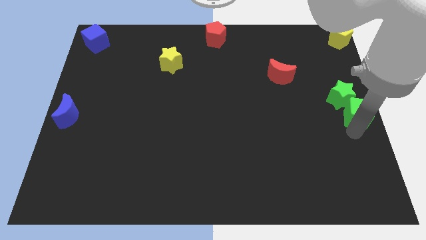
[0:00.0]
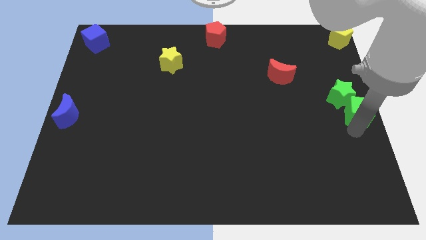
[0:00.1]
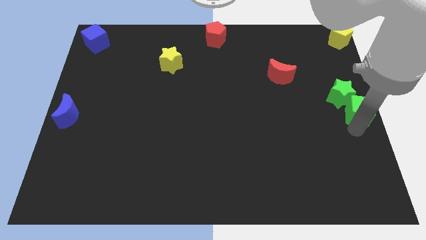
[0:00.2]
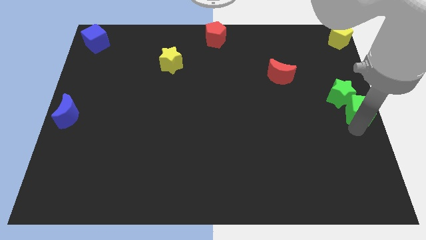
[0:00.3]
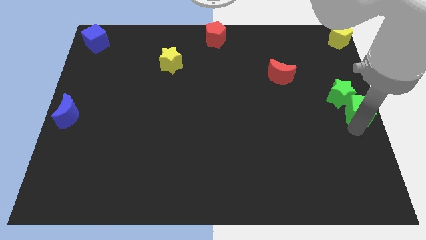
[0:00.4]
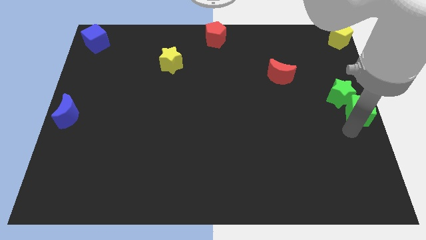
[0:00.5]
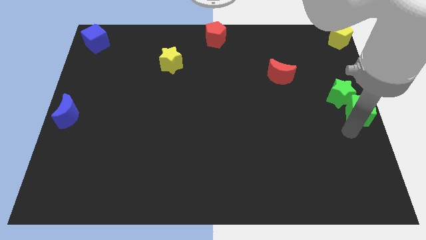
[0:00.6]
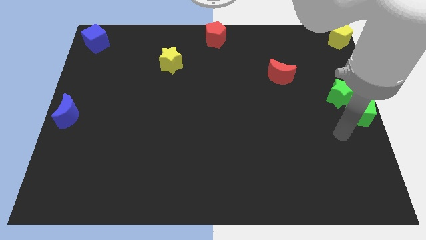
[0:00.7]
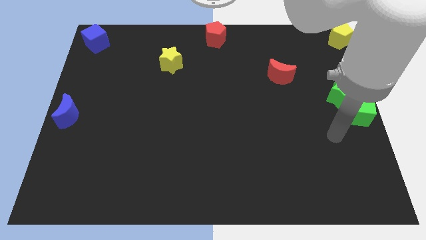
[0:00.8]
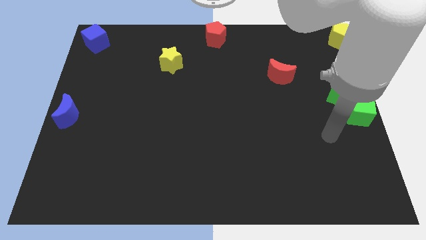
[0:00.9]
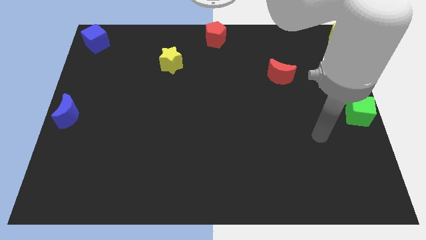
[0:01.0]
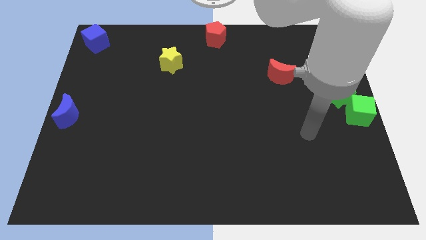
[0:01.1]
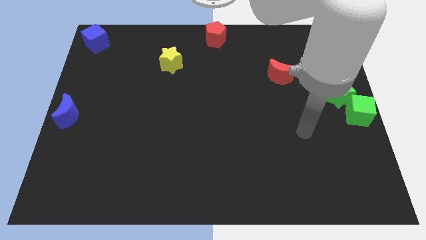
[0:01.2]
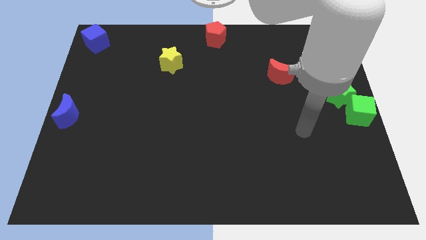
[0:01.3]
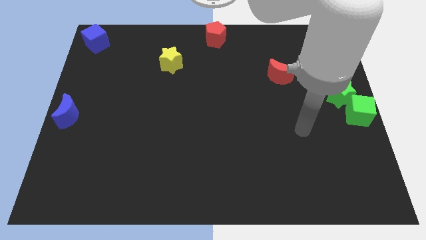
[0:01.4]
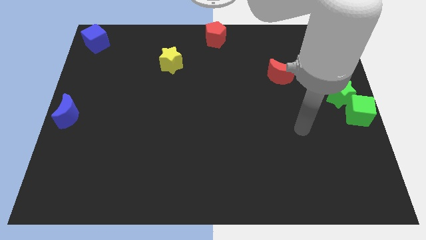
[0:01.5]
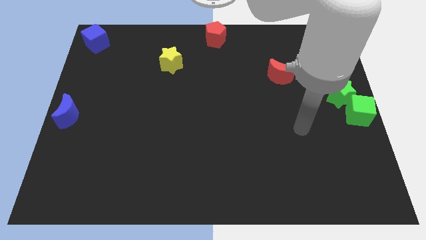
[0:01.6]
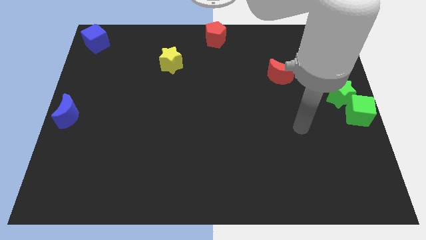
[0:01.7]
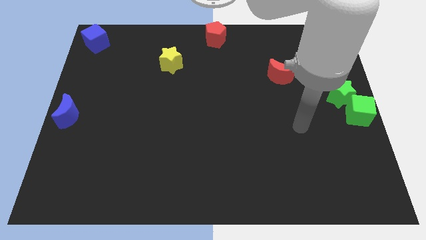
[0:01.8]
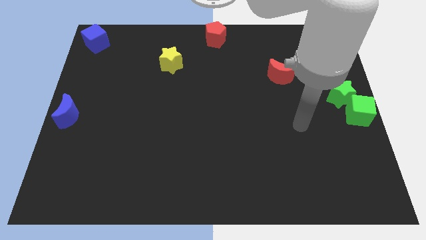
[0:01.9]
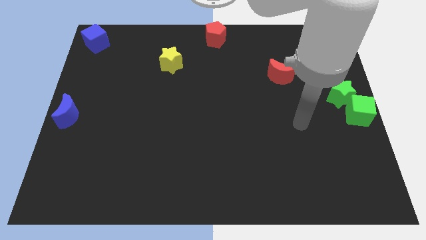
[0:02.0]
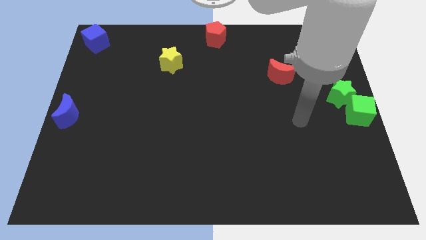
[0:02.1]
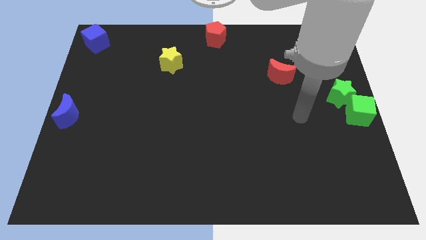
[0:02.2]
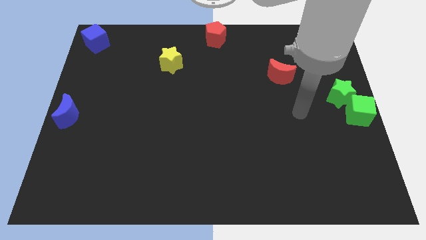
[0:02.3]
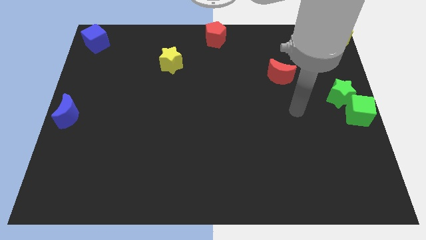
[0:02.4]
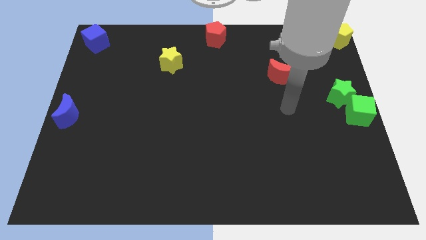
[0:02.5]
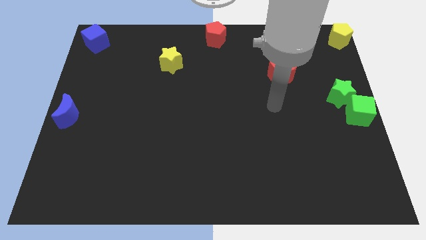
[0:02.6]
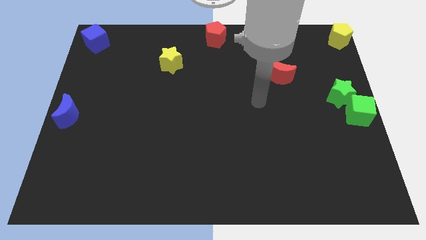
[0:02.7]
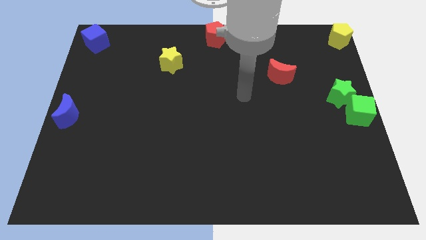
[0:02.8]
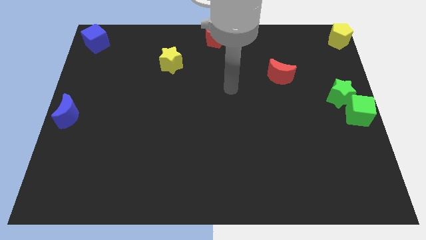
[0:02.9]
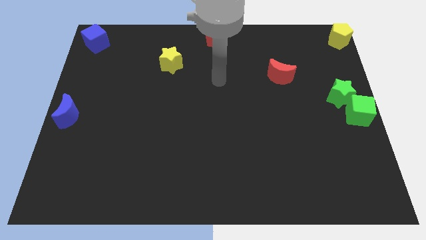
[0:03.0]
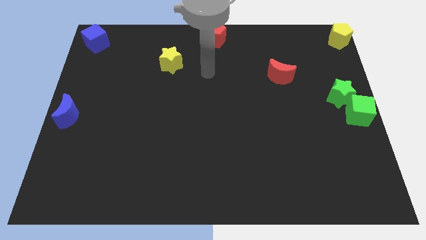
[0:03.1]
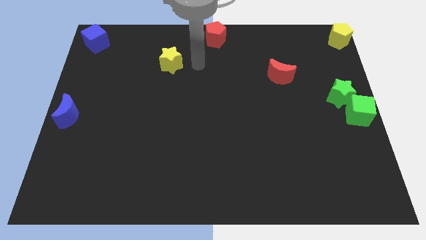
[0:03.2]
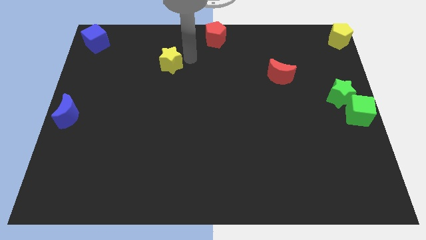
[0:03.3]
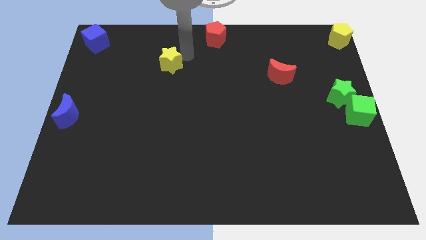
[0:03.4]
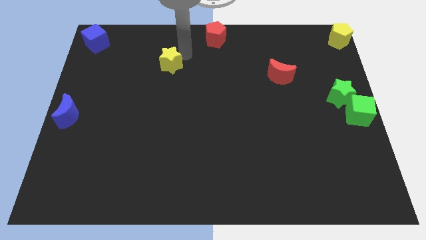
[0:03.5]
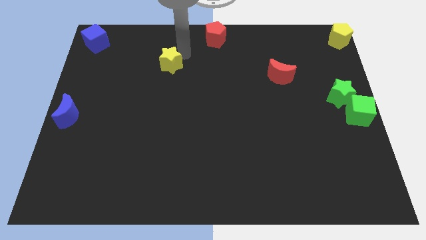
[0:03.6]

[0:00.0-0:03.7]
move arm to the yellow star

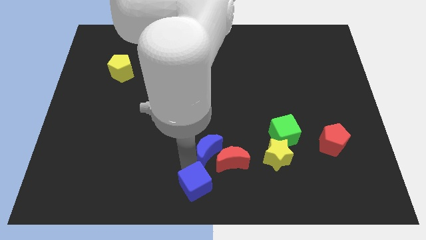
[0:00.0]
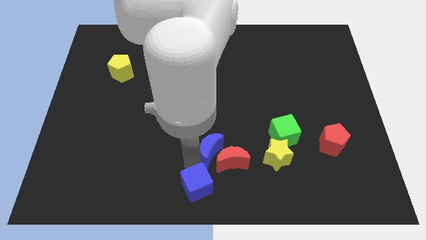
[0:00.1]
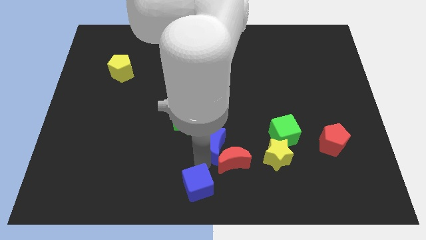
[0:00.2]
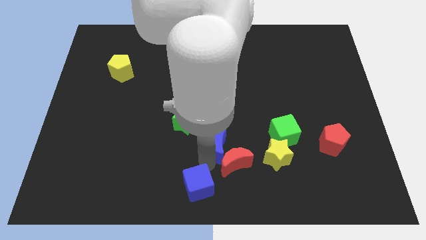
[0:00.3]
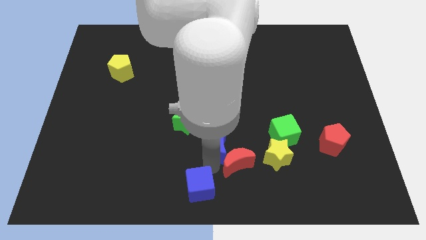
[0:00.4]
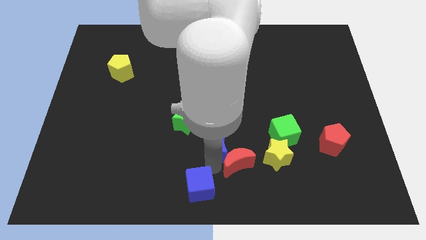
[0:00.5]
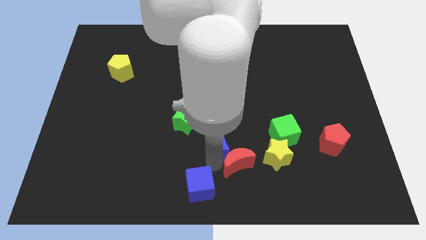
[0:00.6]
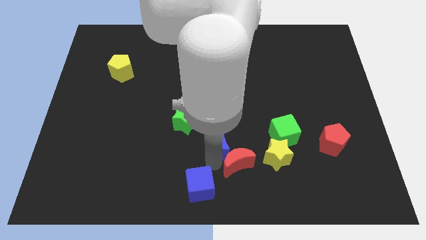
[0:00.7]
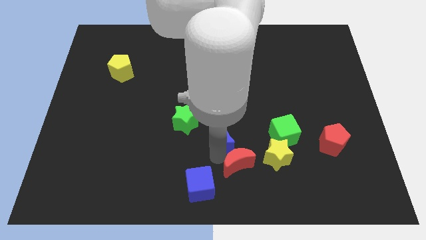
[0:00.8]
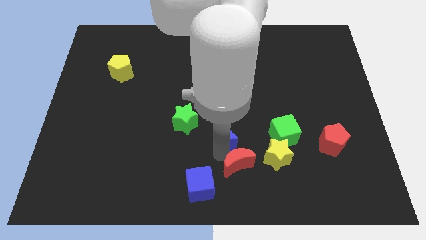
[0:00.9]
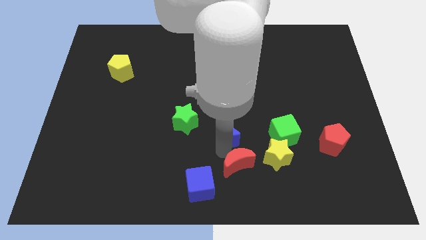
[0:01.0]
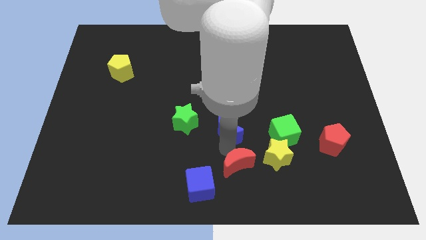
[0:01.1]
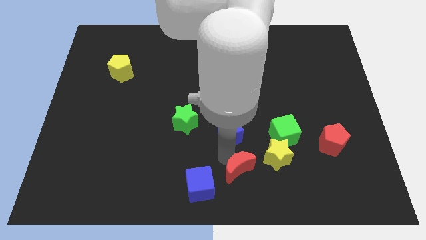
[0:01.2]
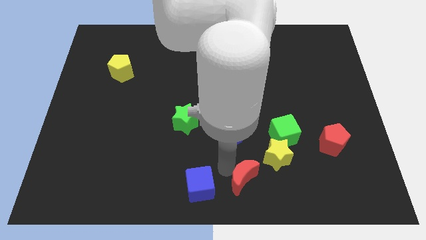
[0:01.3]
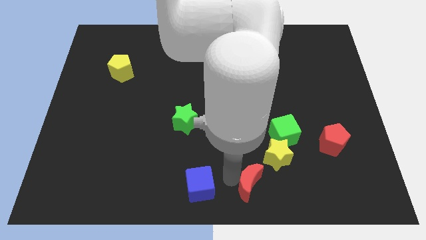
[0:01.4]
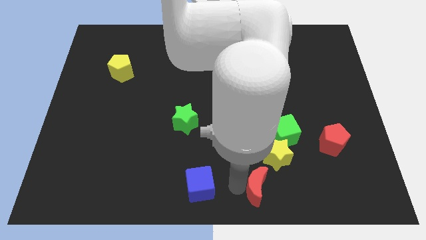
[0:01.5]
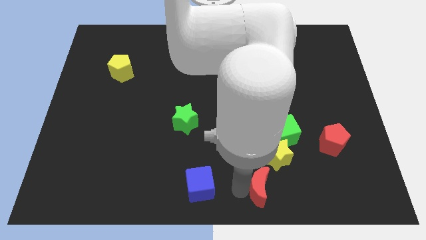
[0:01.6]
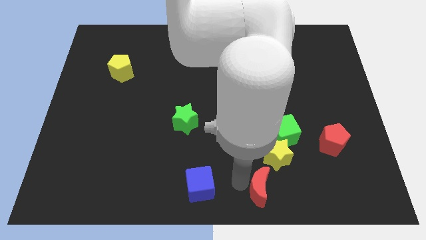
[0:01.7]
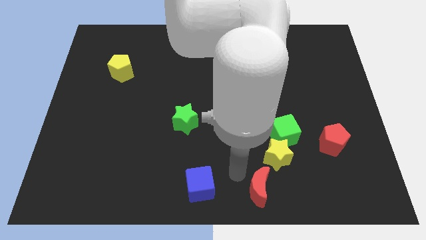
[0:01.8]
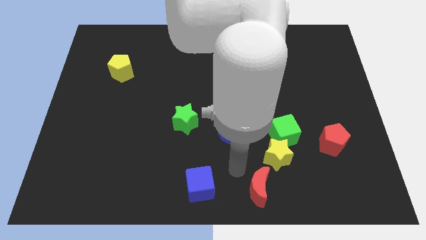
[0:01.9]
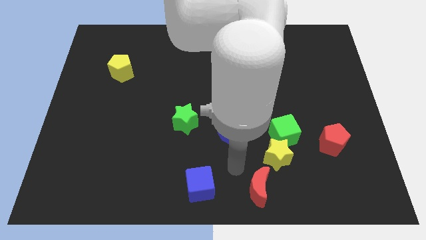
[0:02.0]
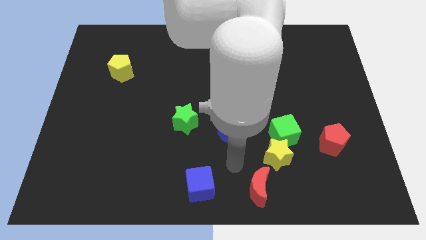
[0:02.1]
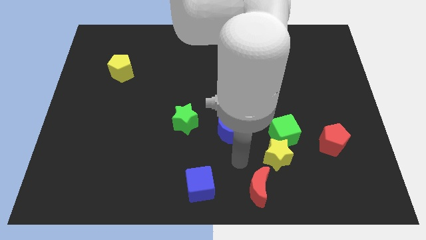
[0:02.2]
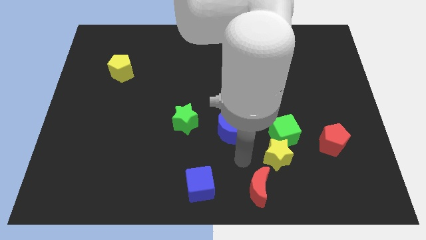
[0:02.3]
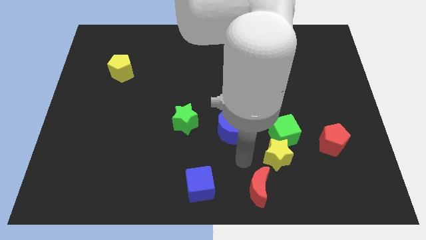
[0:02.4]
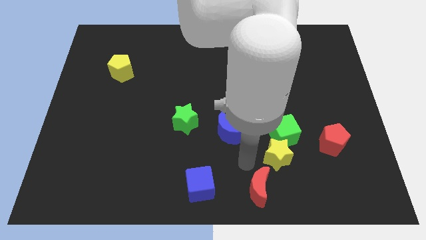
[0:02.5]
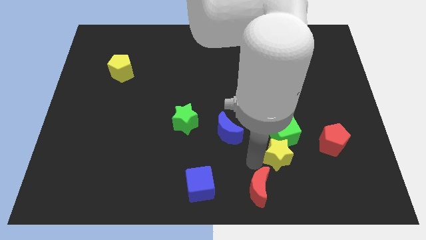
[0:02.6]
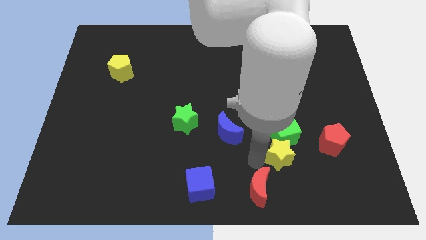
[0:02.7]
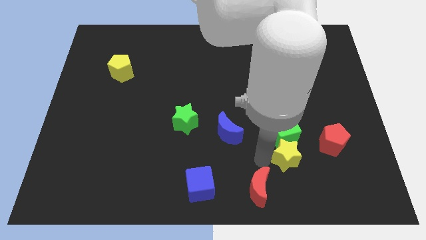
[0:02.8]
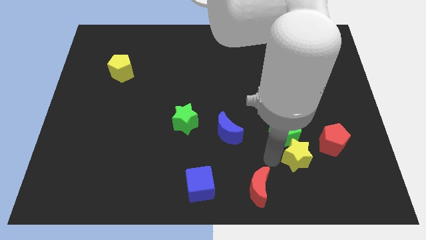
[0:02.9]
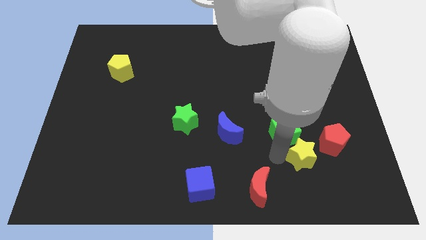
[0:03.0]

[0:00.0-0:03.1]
separate the red crescent from blue crescent

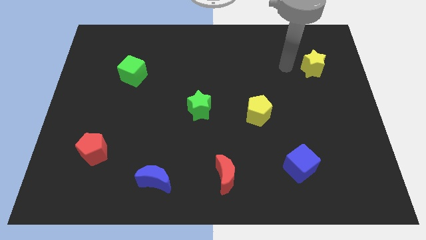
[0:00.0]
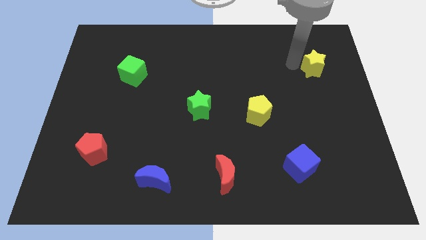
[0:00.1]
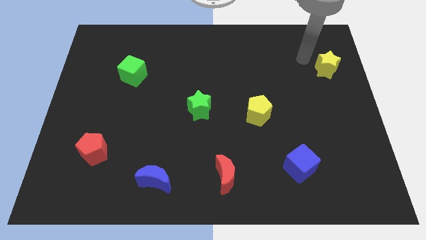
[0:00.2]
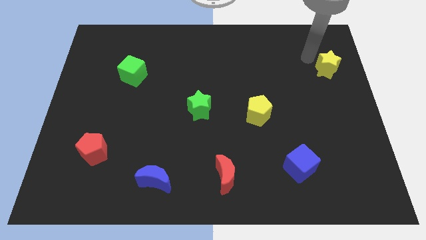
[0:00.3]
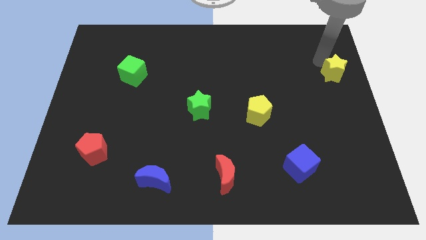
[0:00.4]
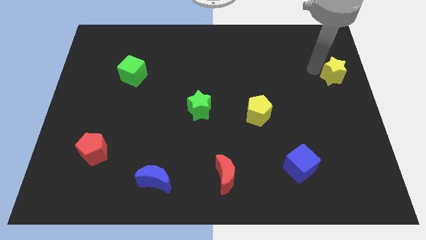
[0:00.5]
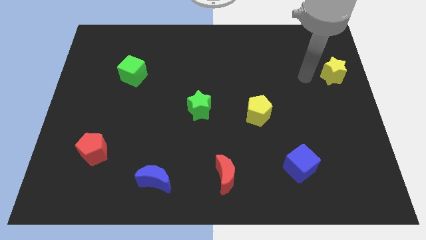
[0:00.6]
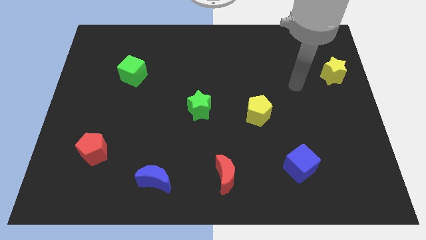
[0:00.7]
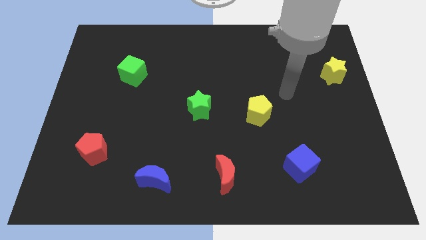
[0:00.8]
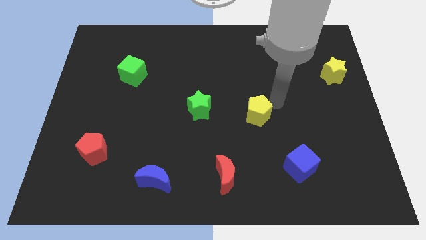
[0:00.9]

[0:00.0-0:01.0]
move your arm away from the yellow star

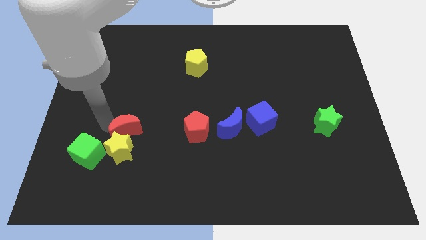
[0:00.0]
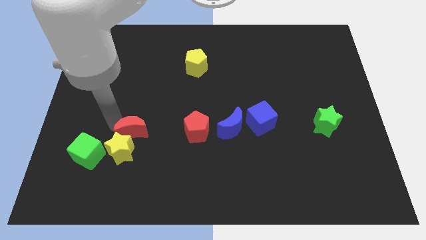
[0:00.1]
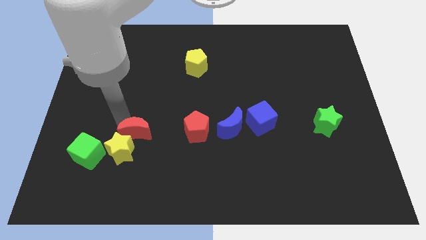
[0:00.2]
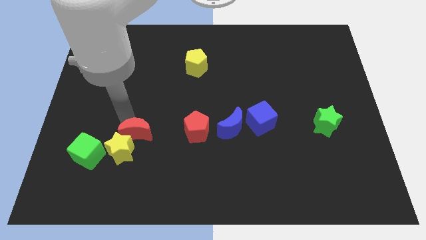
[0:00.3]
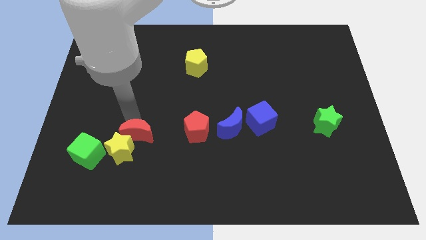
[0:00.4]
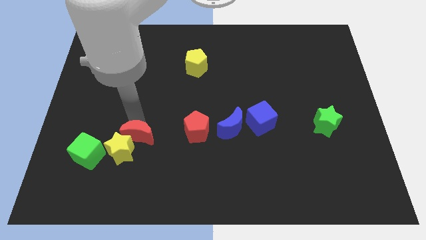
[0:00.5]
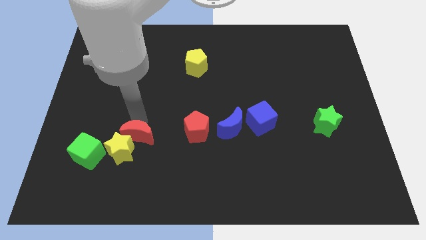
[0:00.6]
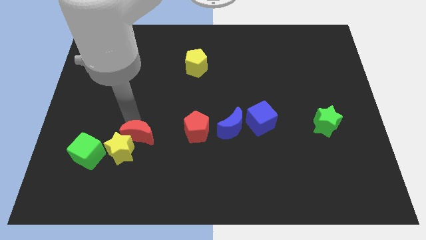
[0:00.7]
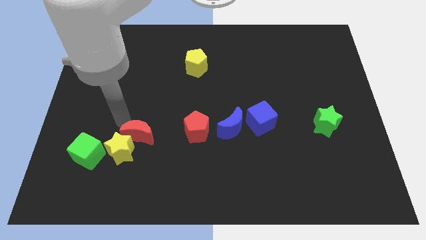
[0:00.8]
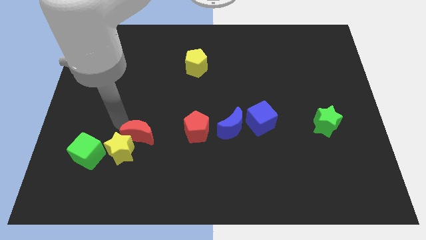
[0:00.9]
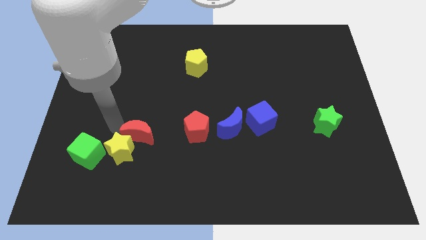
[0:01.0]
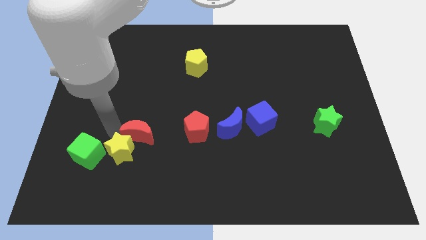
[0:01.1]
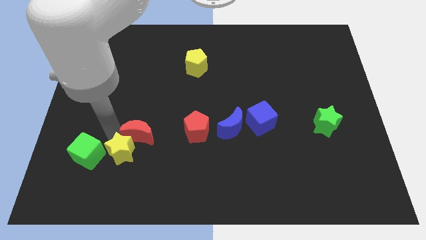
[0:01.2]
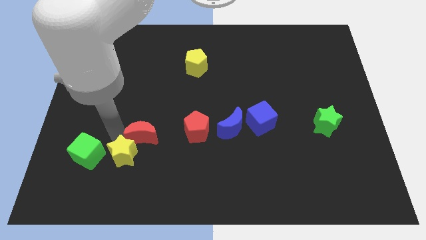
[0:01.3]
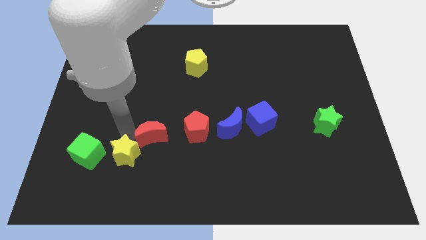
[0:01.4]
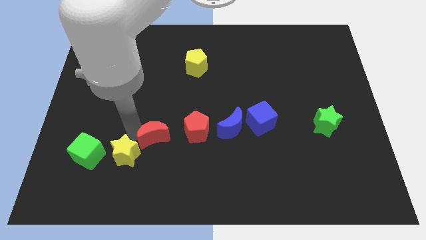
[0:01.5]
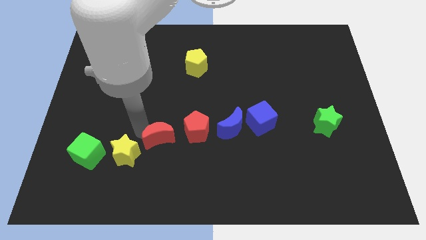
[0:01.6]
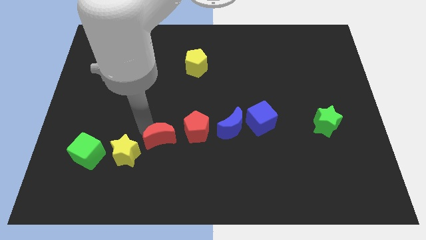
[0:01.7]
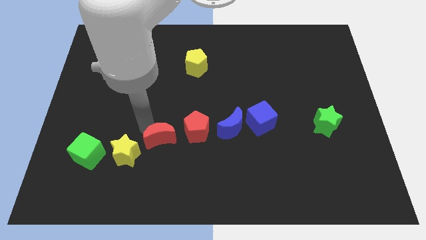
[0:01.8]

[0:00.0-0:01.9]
place the red crescent at the top right side of the yellow star
